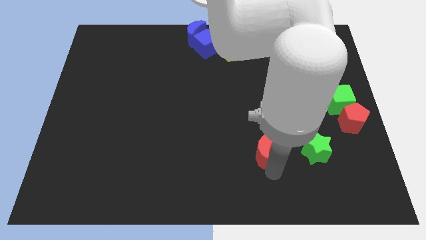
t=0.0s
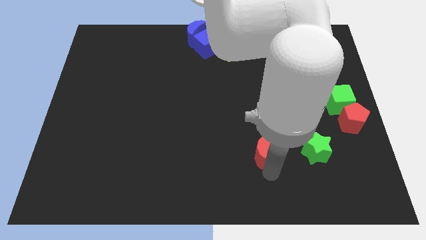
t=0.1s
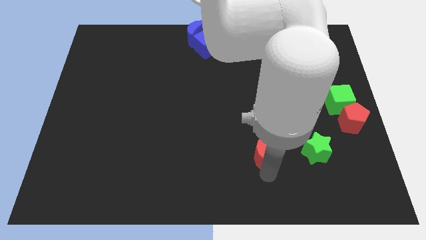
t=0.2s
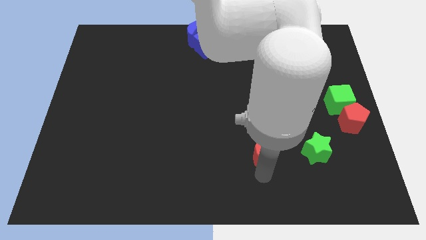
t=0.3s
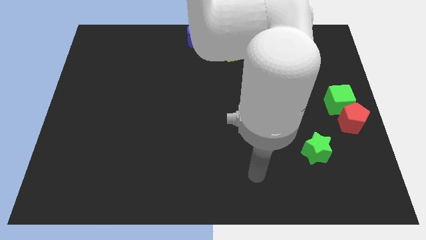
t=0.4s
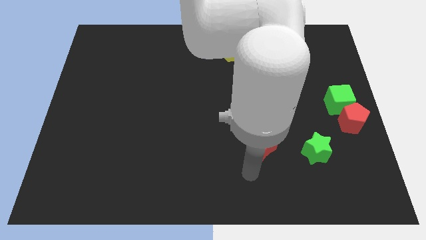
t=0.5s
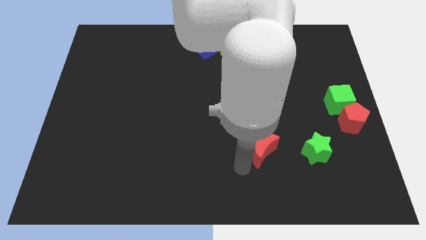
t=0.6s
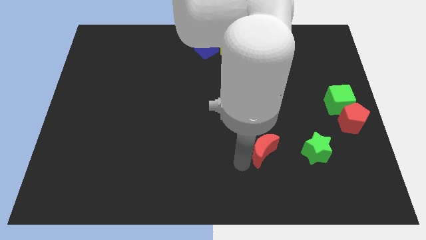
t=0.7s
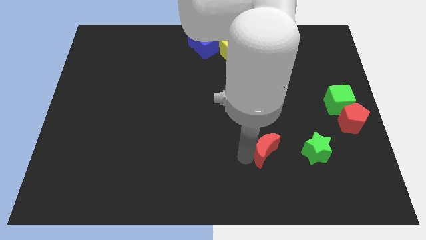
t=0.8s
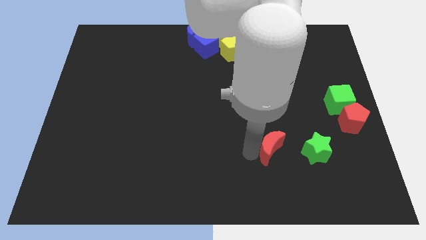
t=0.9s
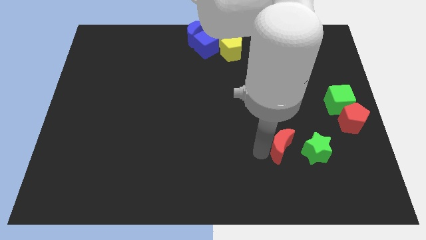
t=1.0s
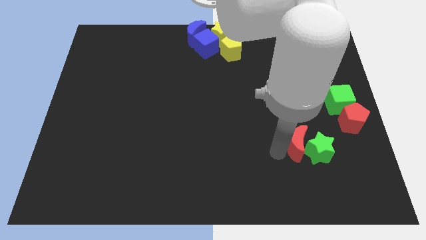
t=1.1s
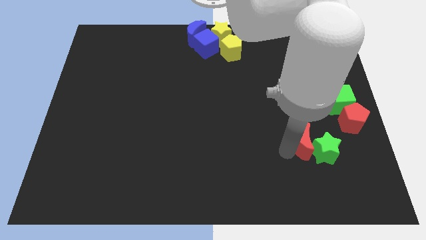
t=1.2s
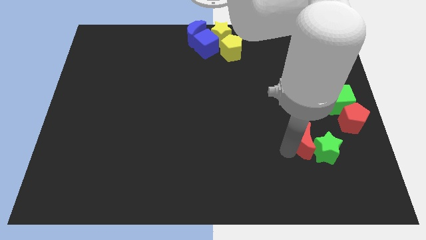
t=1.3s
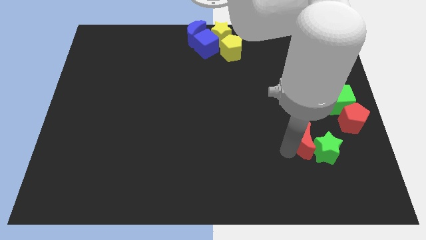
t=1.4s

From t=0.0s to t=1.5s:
push red crescent into green star

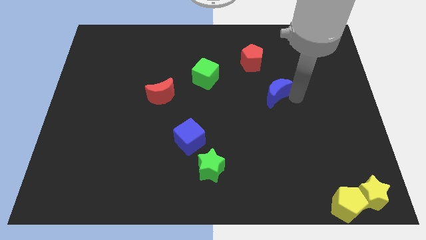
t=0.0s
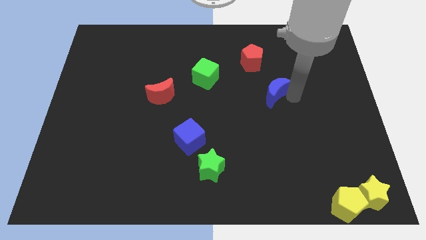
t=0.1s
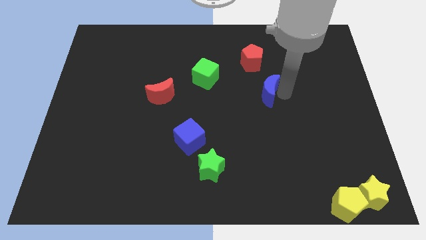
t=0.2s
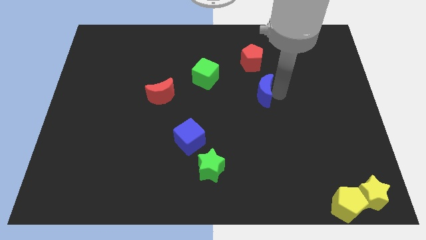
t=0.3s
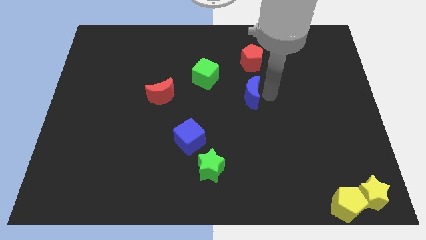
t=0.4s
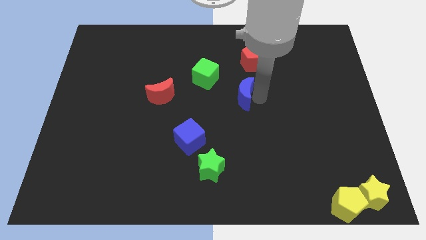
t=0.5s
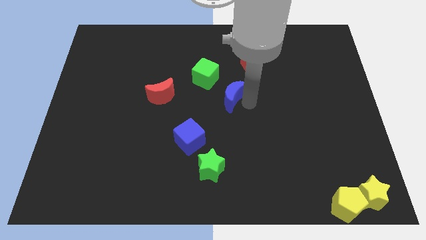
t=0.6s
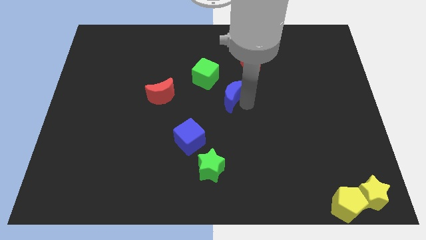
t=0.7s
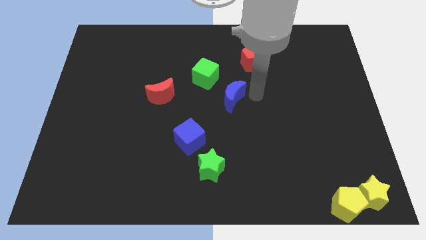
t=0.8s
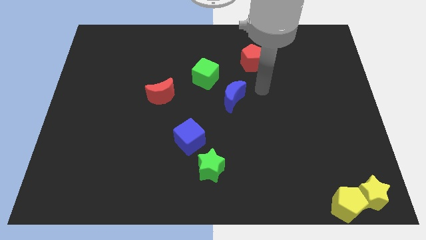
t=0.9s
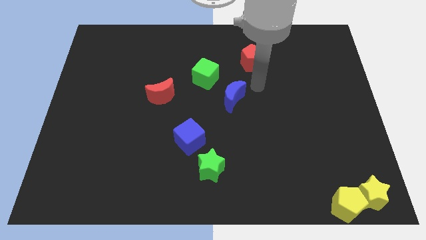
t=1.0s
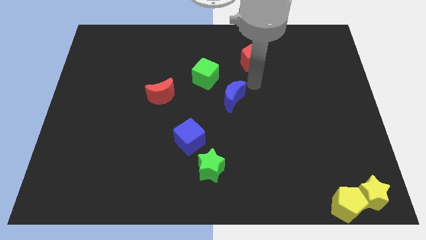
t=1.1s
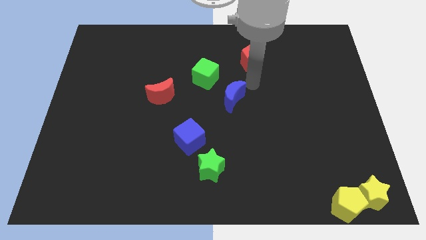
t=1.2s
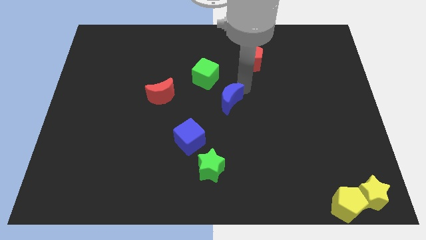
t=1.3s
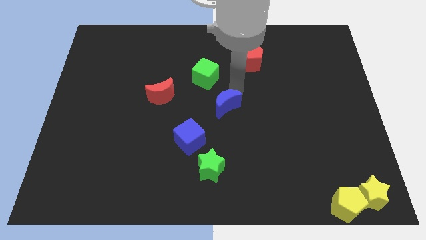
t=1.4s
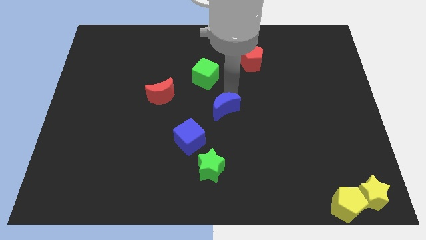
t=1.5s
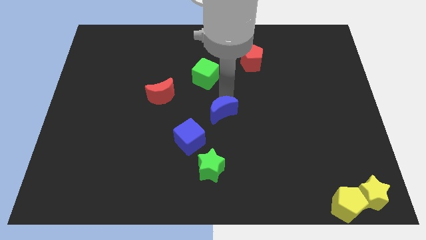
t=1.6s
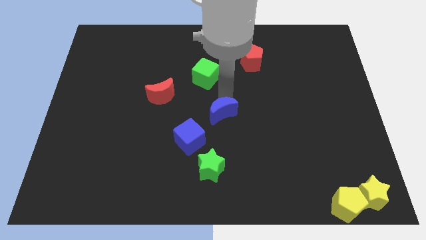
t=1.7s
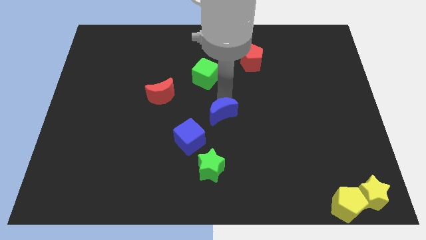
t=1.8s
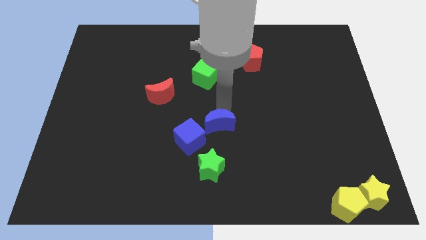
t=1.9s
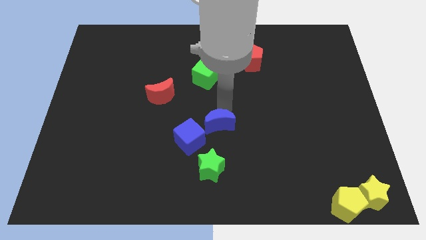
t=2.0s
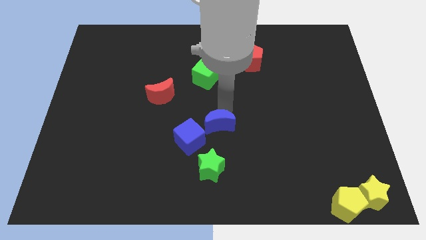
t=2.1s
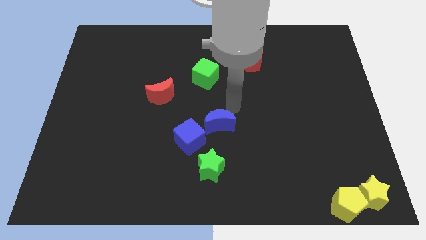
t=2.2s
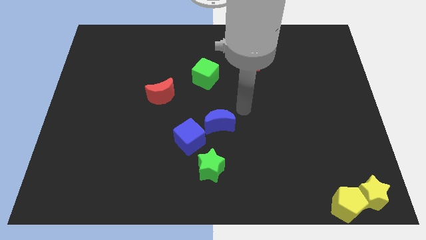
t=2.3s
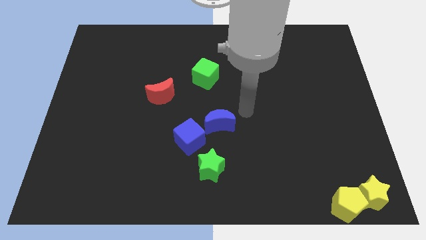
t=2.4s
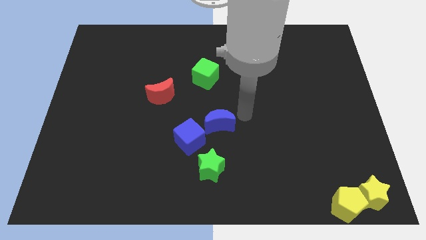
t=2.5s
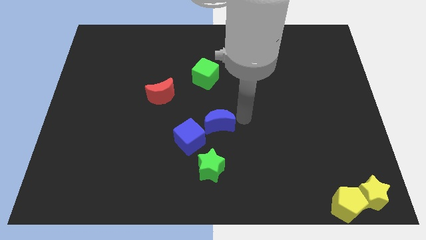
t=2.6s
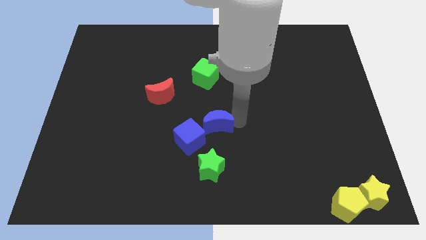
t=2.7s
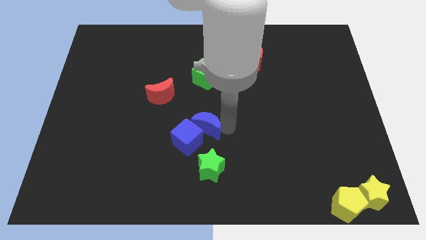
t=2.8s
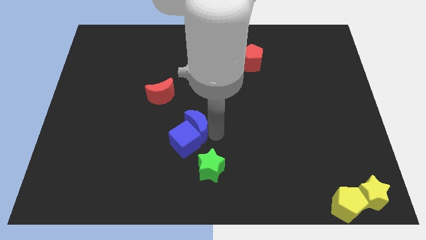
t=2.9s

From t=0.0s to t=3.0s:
place the blue crescent above the blue cube

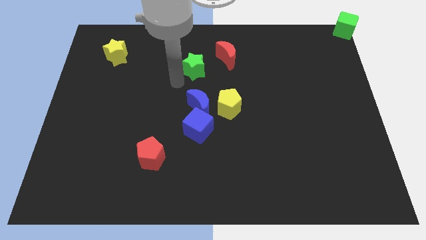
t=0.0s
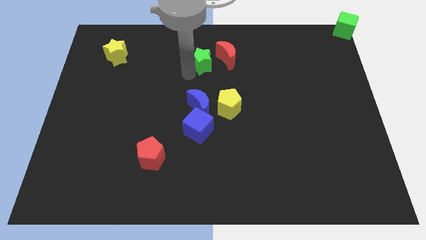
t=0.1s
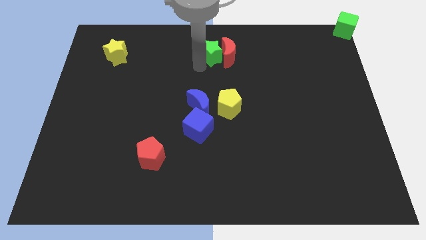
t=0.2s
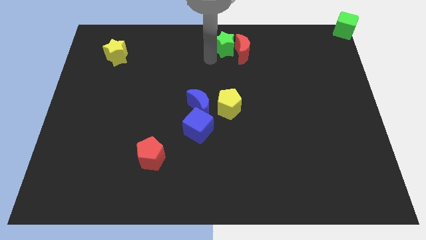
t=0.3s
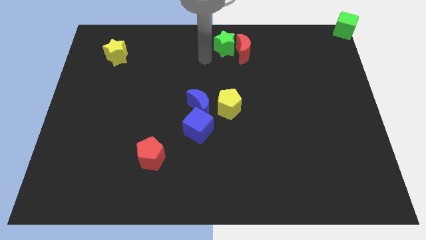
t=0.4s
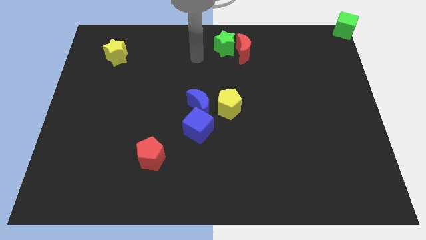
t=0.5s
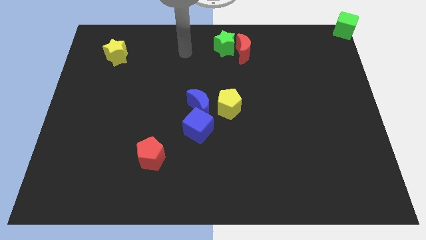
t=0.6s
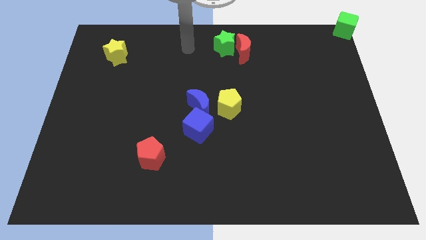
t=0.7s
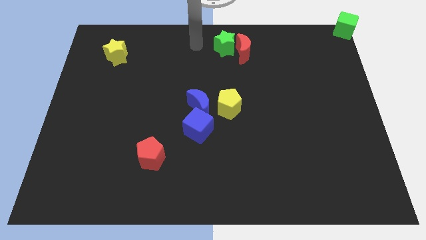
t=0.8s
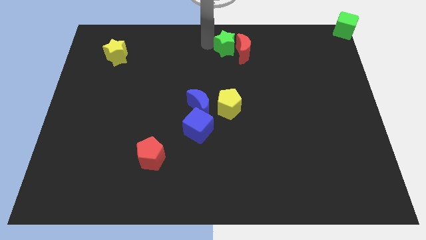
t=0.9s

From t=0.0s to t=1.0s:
move the green star to the left of the red crescent

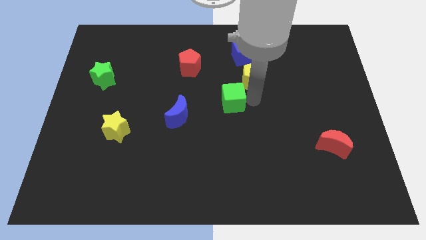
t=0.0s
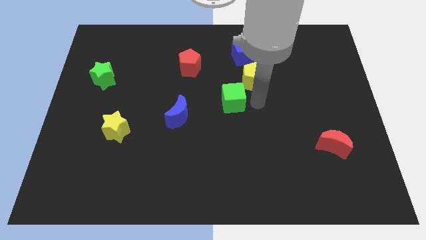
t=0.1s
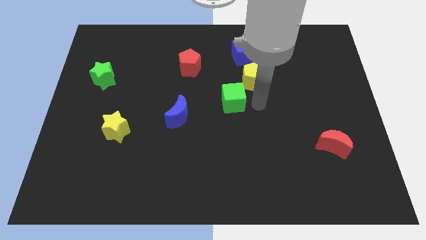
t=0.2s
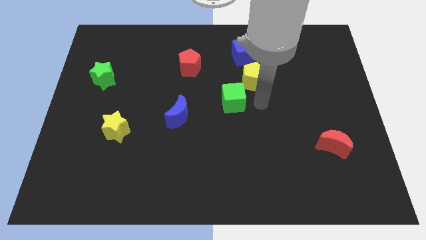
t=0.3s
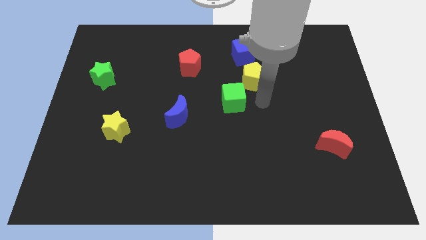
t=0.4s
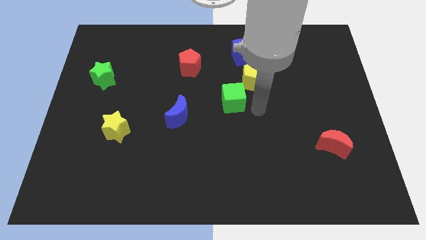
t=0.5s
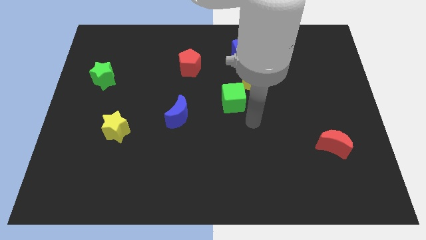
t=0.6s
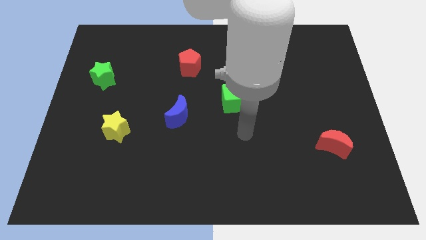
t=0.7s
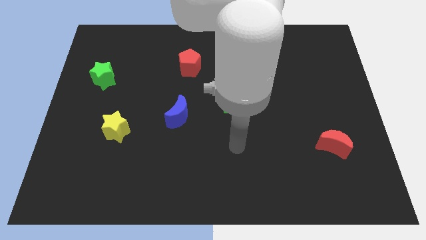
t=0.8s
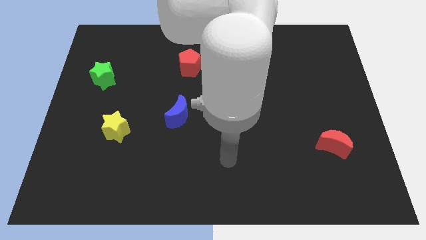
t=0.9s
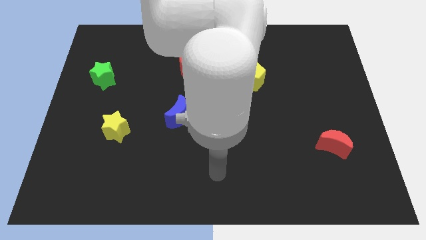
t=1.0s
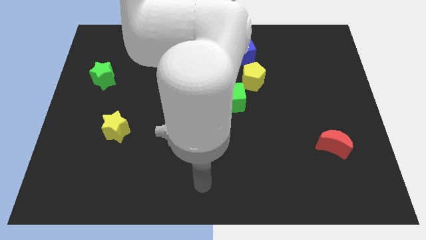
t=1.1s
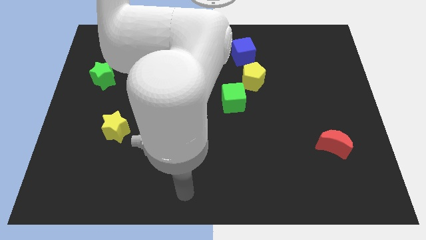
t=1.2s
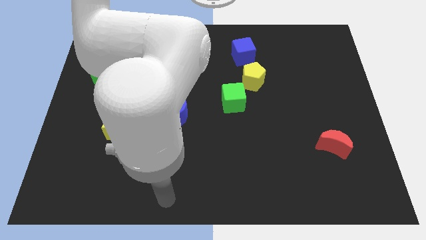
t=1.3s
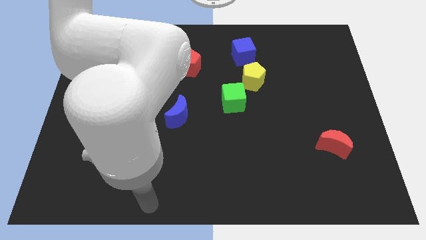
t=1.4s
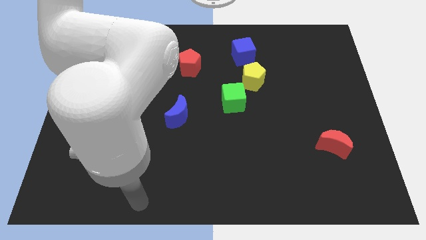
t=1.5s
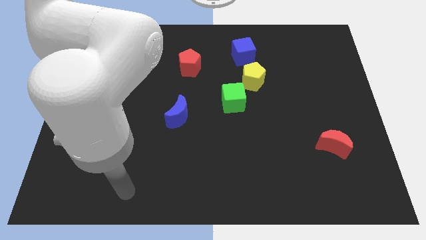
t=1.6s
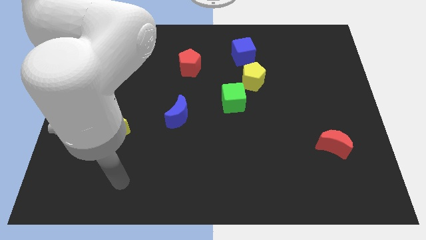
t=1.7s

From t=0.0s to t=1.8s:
move your arm away from the yellow pentagon

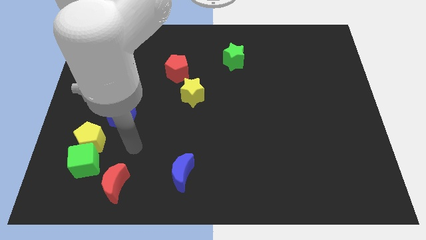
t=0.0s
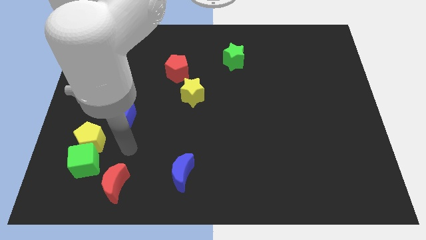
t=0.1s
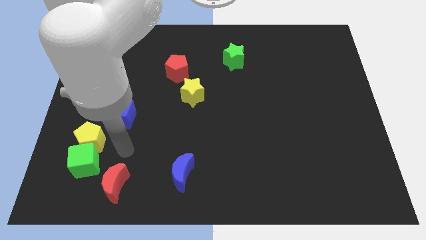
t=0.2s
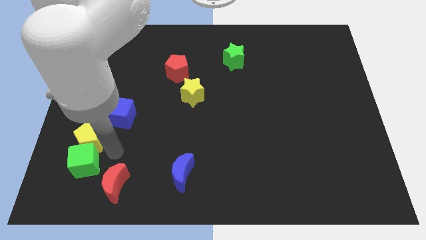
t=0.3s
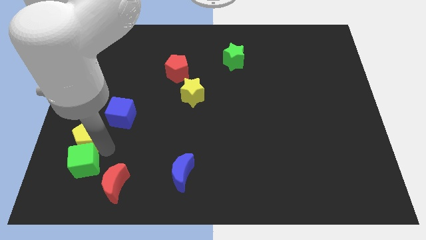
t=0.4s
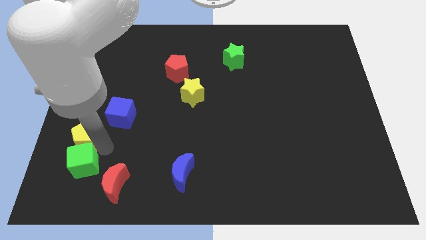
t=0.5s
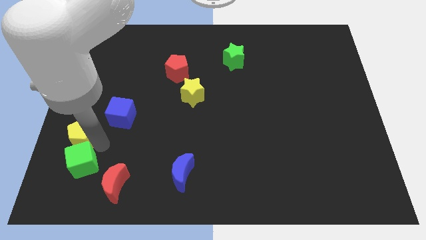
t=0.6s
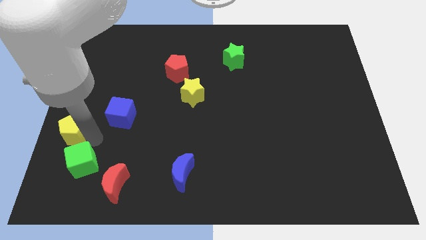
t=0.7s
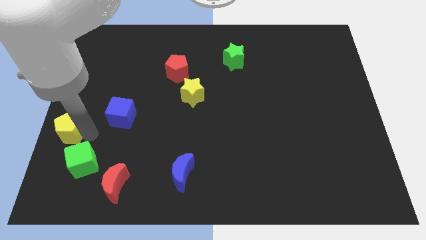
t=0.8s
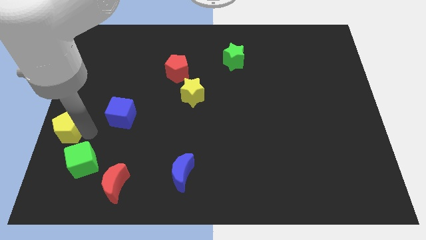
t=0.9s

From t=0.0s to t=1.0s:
push the yellow pentagon slightly to the left

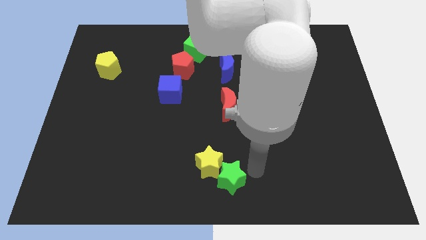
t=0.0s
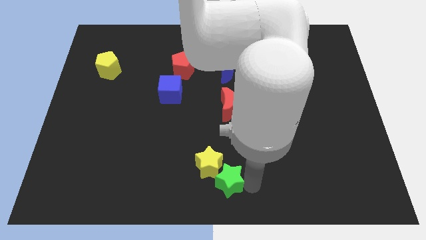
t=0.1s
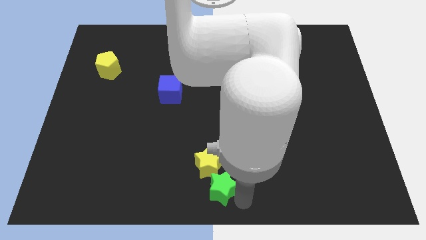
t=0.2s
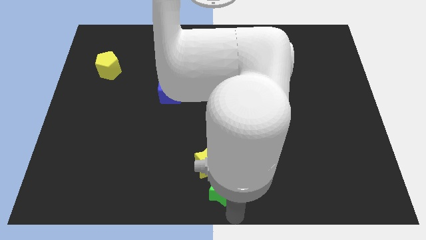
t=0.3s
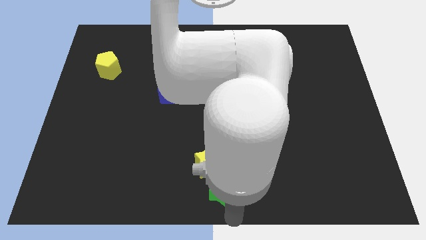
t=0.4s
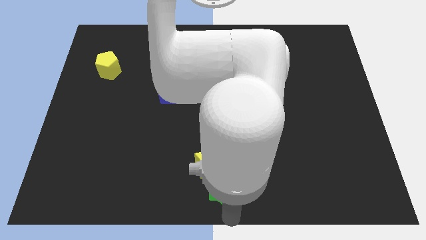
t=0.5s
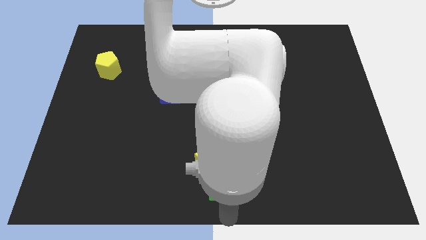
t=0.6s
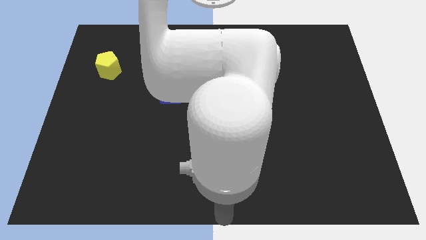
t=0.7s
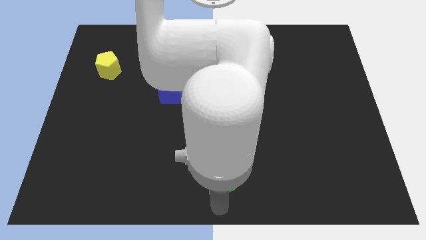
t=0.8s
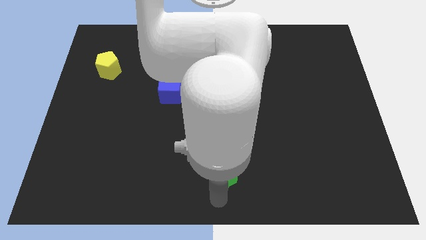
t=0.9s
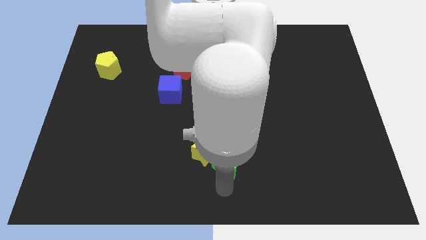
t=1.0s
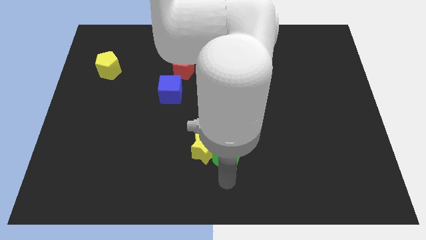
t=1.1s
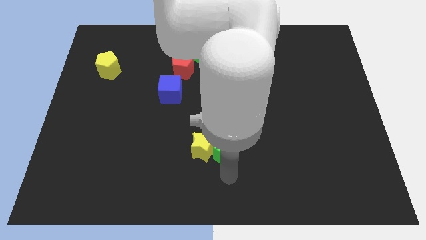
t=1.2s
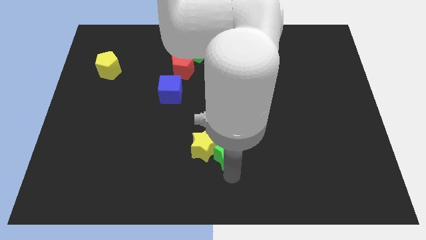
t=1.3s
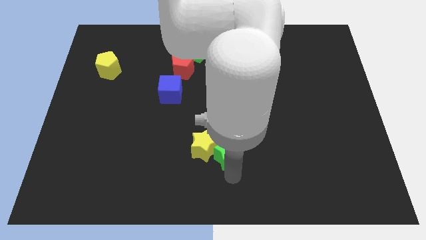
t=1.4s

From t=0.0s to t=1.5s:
move the green star into the yellow star
